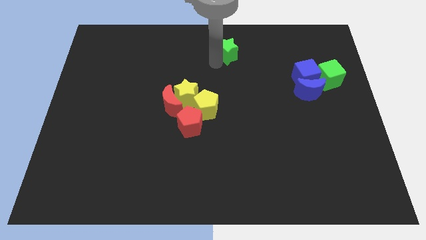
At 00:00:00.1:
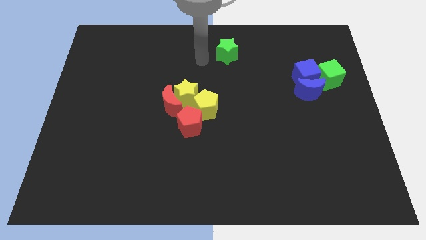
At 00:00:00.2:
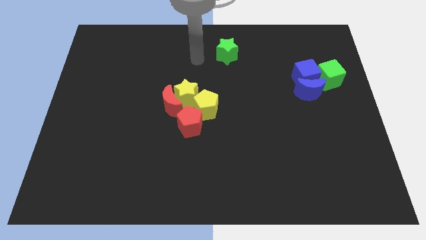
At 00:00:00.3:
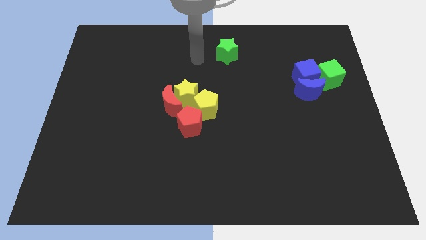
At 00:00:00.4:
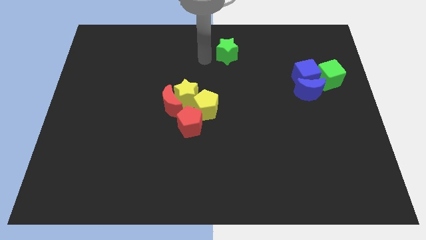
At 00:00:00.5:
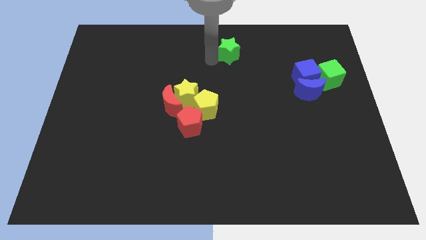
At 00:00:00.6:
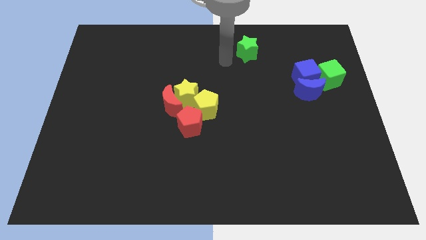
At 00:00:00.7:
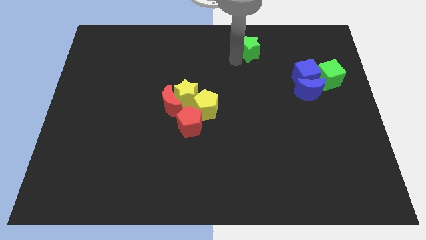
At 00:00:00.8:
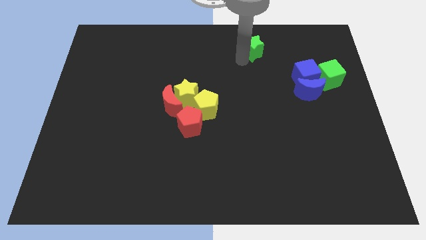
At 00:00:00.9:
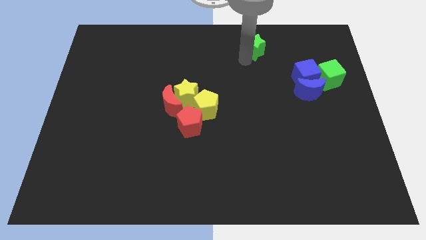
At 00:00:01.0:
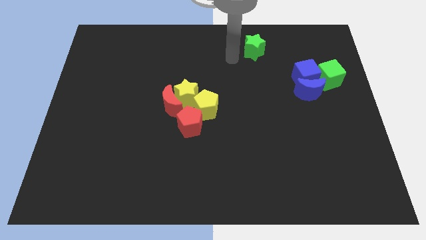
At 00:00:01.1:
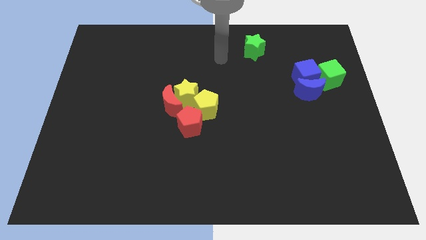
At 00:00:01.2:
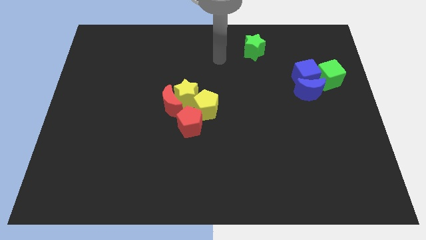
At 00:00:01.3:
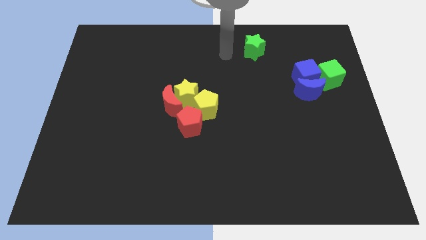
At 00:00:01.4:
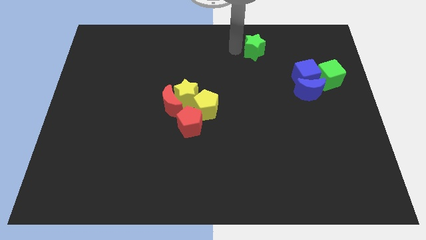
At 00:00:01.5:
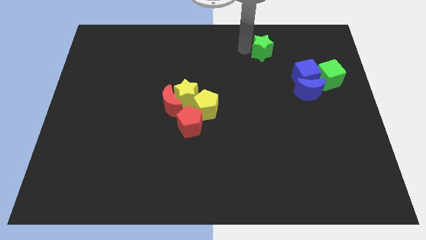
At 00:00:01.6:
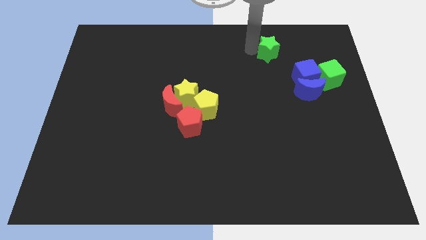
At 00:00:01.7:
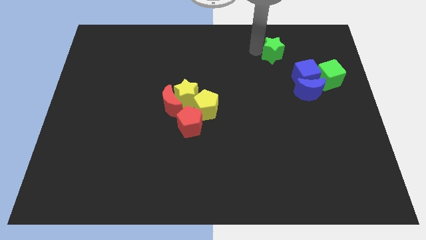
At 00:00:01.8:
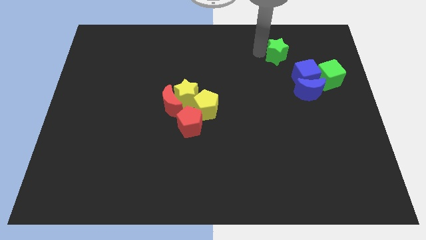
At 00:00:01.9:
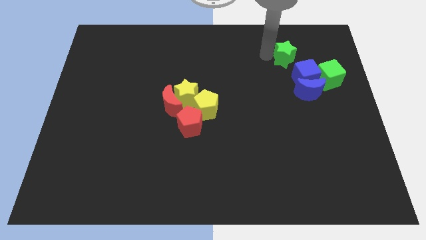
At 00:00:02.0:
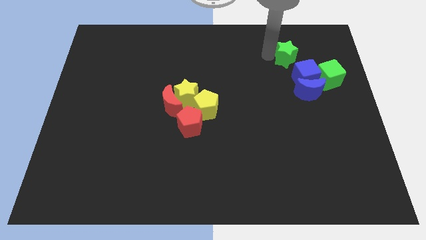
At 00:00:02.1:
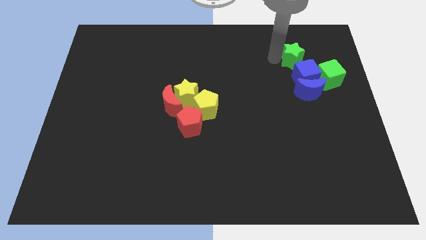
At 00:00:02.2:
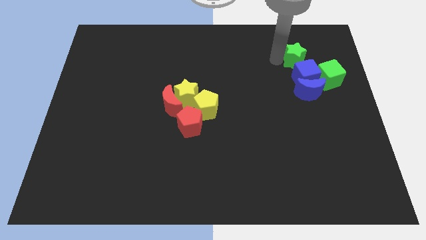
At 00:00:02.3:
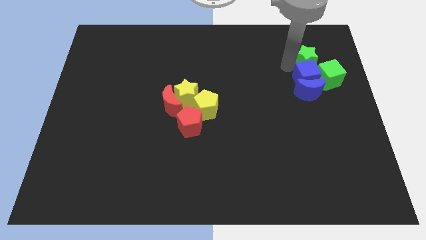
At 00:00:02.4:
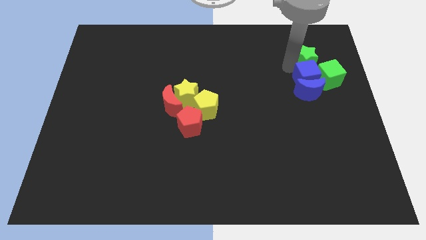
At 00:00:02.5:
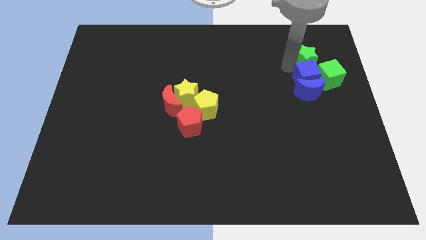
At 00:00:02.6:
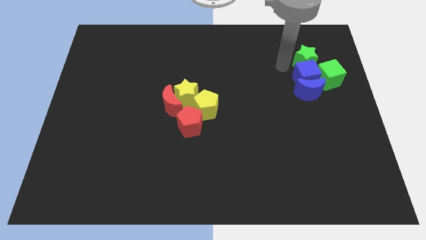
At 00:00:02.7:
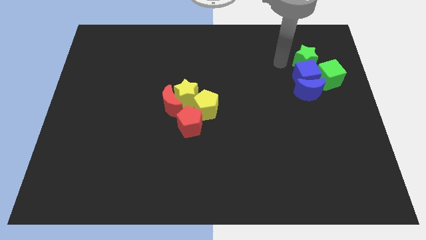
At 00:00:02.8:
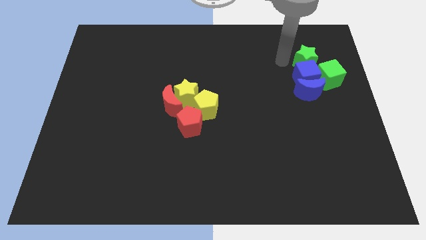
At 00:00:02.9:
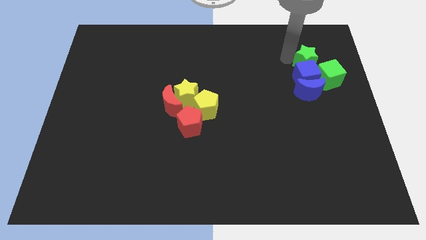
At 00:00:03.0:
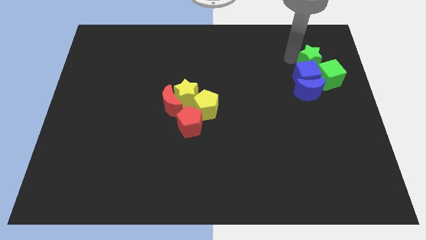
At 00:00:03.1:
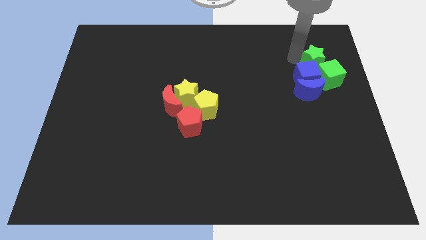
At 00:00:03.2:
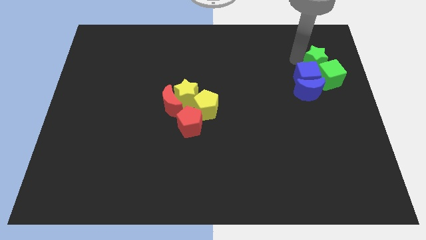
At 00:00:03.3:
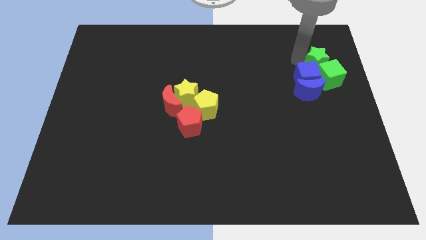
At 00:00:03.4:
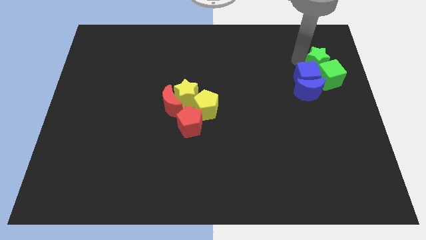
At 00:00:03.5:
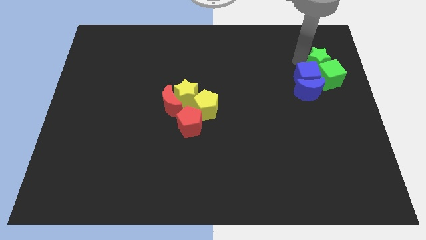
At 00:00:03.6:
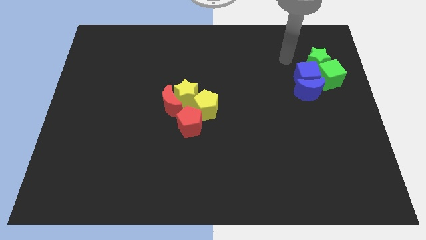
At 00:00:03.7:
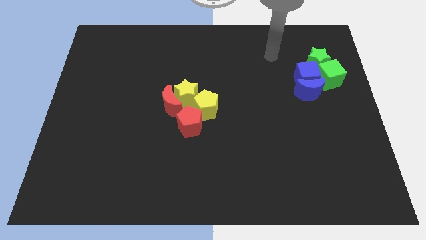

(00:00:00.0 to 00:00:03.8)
place the green star above the green cube

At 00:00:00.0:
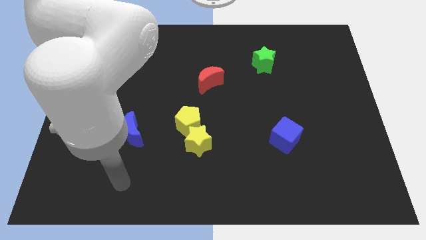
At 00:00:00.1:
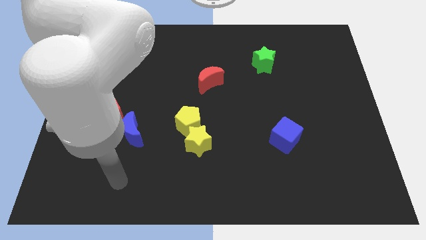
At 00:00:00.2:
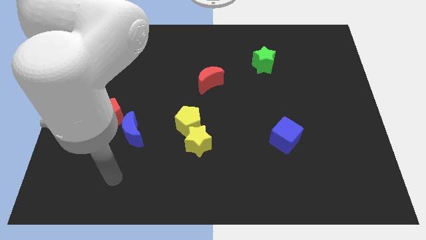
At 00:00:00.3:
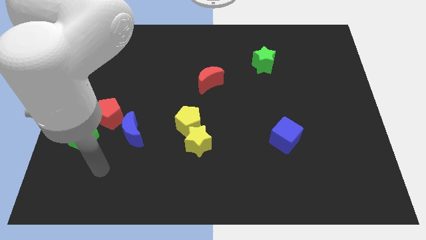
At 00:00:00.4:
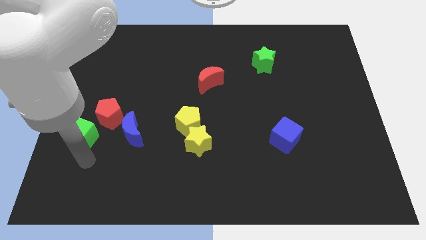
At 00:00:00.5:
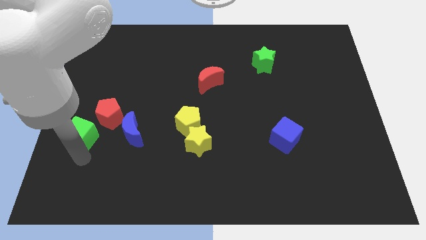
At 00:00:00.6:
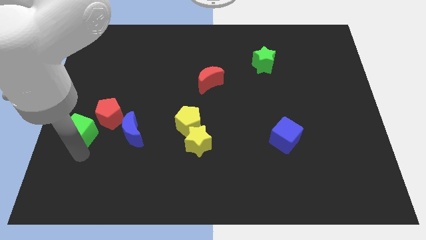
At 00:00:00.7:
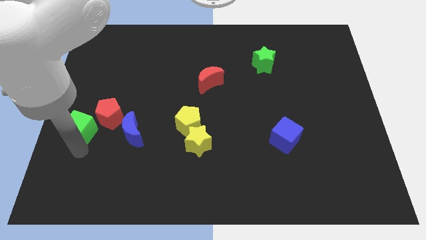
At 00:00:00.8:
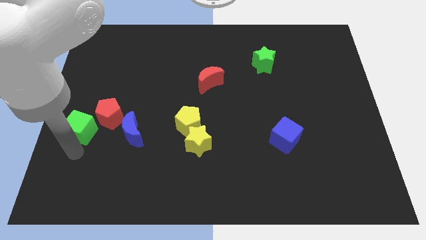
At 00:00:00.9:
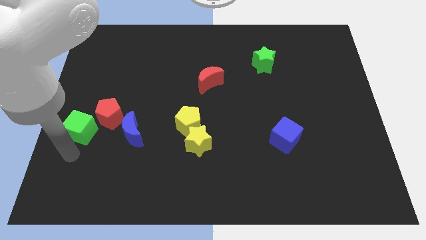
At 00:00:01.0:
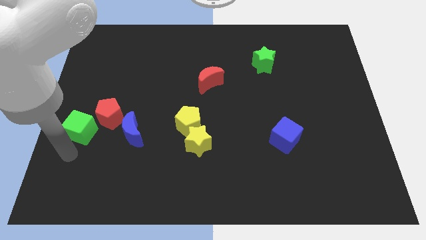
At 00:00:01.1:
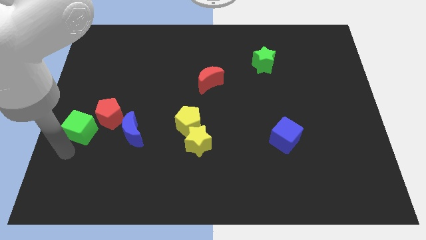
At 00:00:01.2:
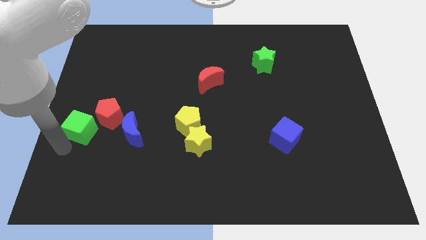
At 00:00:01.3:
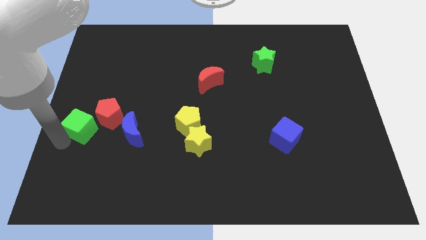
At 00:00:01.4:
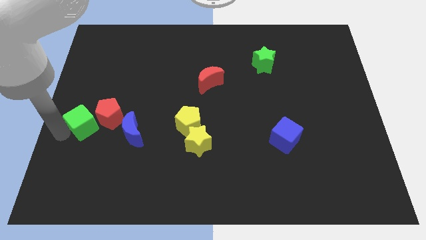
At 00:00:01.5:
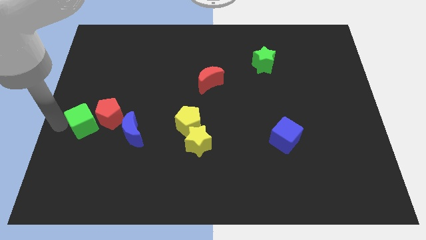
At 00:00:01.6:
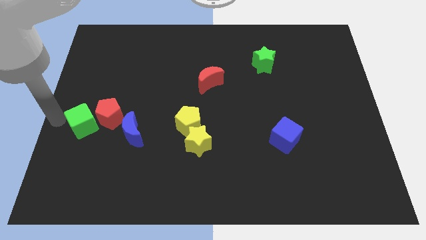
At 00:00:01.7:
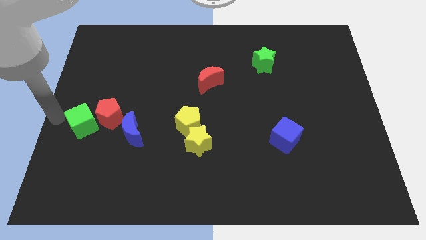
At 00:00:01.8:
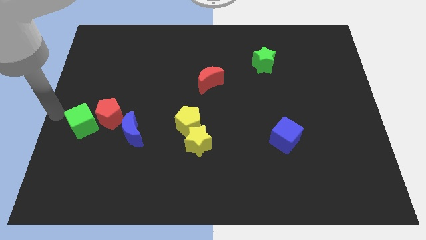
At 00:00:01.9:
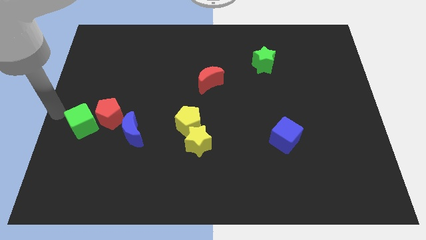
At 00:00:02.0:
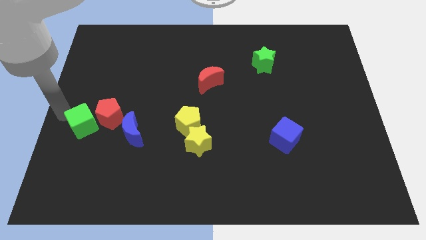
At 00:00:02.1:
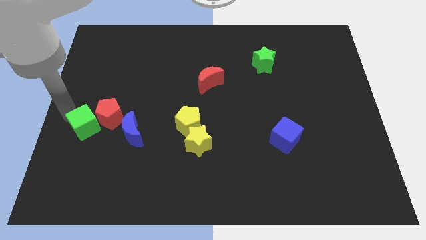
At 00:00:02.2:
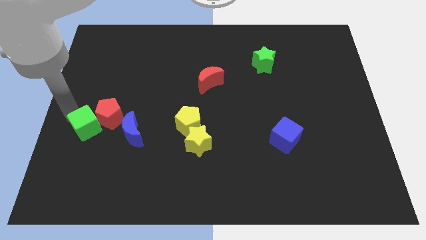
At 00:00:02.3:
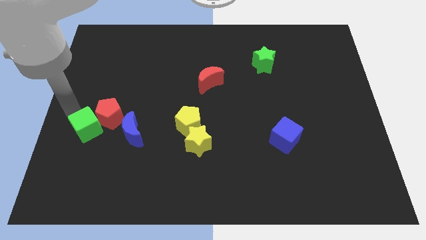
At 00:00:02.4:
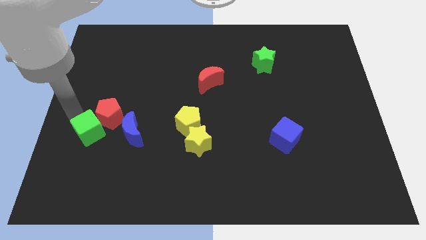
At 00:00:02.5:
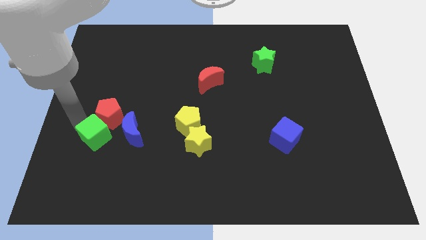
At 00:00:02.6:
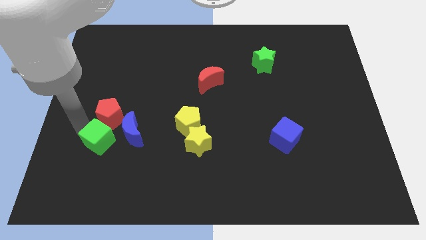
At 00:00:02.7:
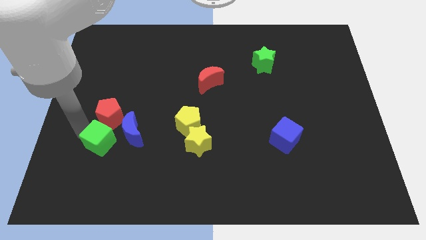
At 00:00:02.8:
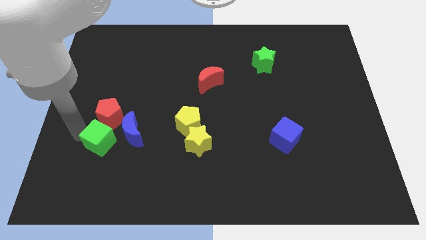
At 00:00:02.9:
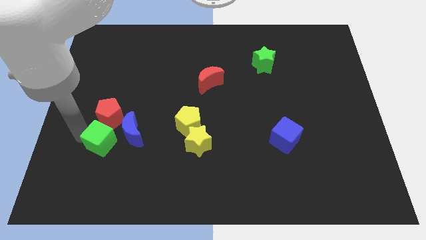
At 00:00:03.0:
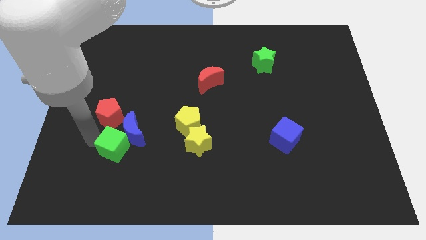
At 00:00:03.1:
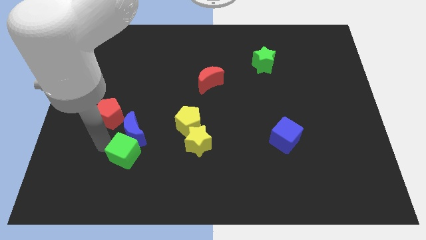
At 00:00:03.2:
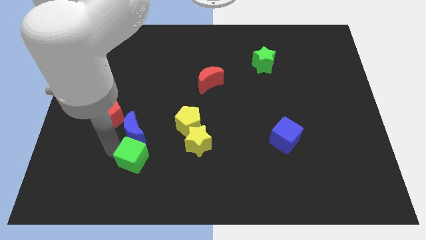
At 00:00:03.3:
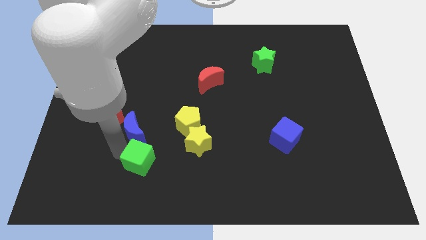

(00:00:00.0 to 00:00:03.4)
place a green cube to the bottom of the blue moon

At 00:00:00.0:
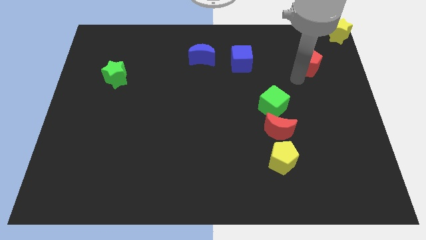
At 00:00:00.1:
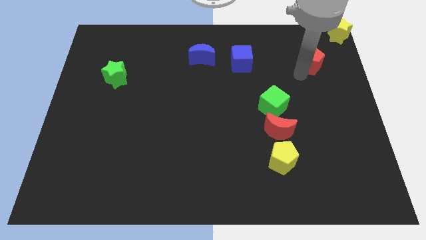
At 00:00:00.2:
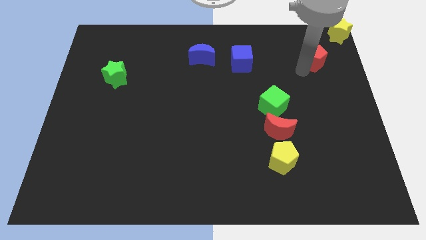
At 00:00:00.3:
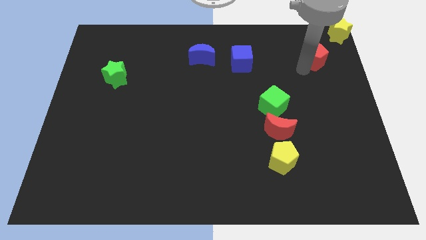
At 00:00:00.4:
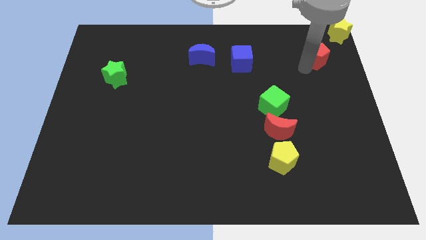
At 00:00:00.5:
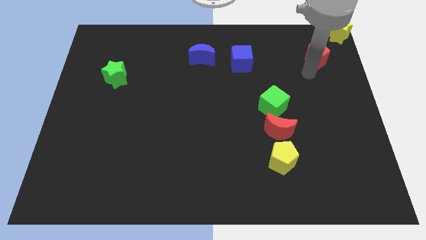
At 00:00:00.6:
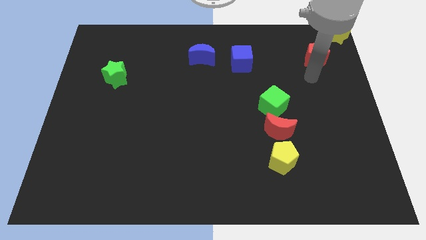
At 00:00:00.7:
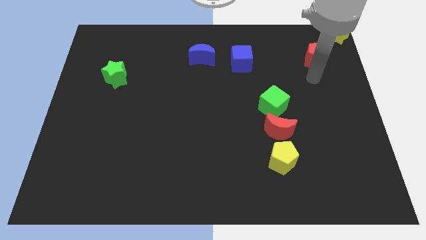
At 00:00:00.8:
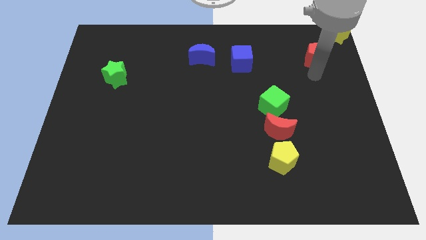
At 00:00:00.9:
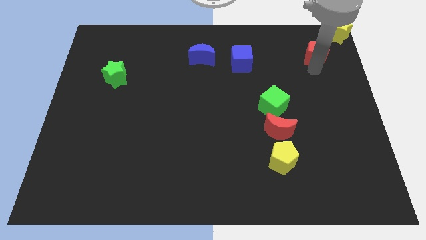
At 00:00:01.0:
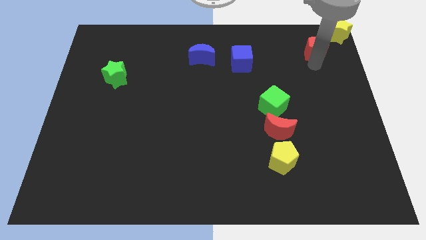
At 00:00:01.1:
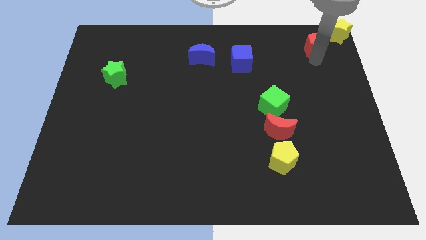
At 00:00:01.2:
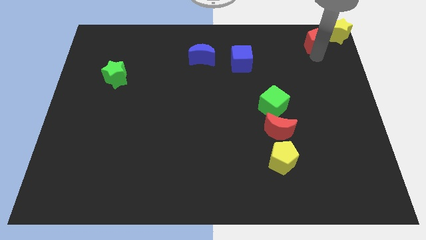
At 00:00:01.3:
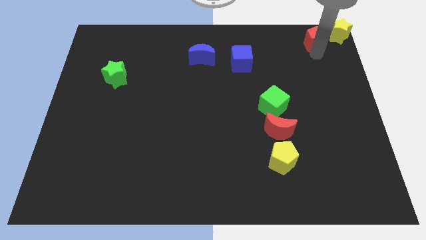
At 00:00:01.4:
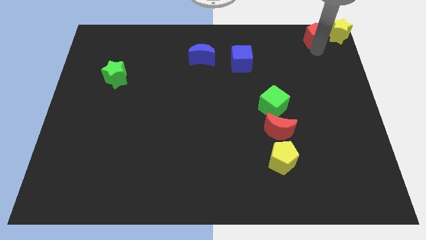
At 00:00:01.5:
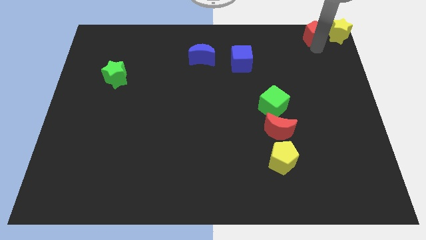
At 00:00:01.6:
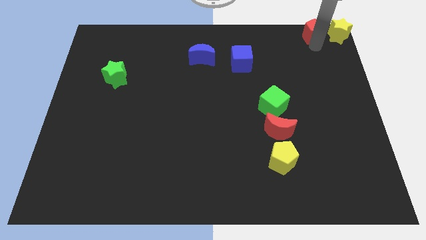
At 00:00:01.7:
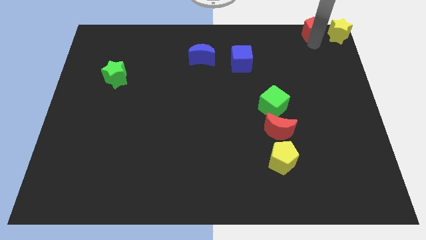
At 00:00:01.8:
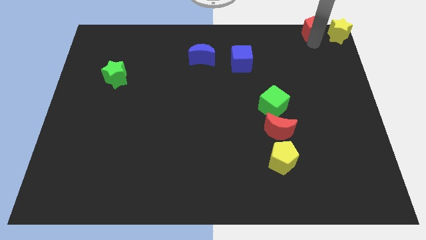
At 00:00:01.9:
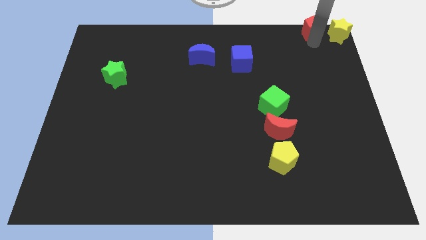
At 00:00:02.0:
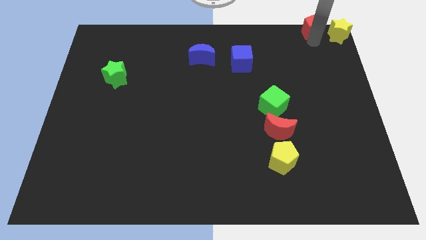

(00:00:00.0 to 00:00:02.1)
slide red pentagon to the top right
